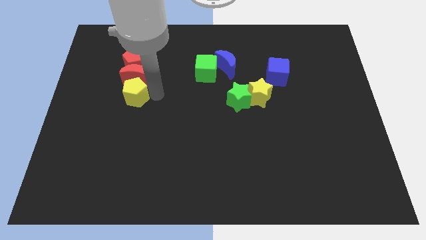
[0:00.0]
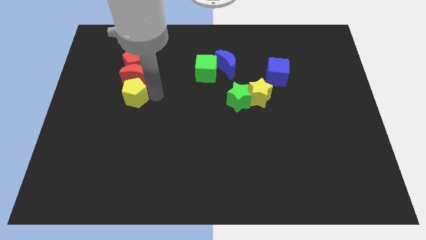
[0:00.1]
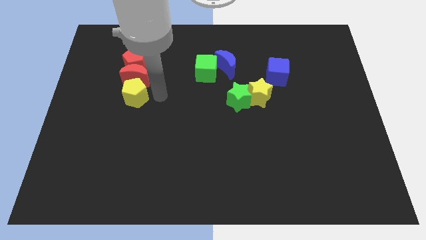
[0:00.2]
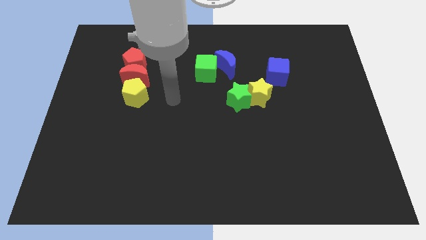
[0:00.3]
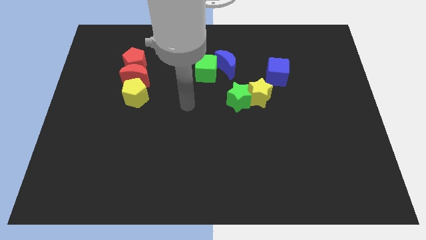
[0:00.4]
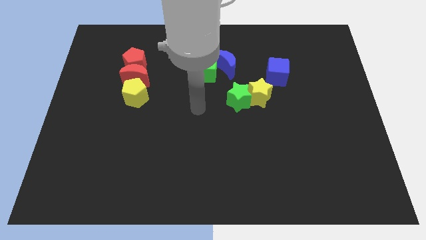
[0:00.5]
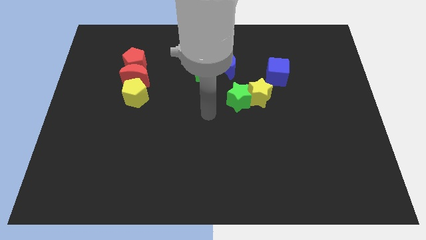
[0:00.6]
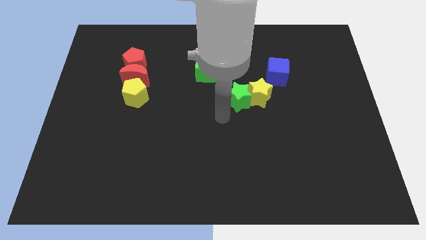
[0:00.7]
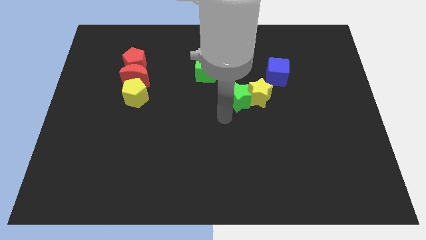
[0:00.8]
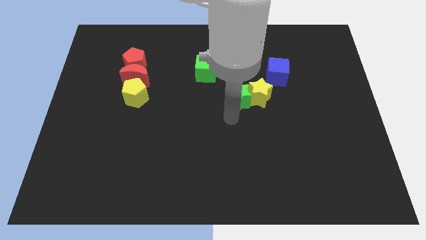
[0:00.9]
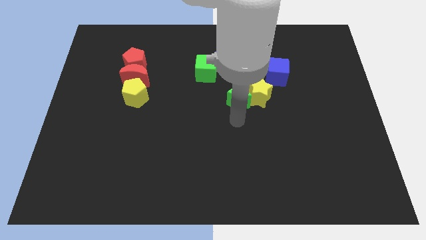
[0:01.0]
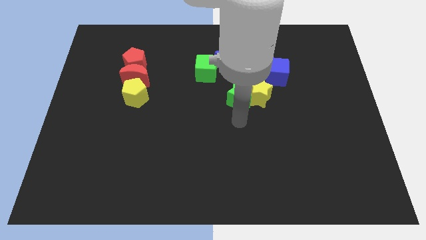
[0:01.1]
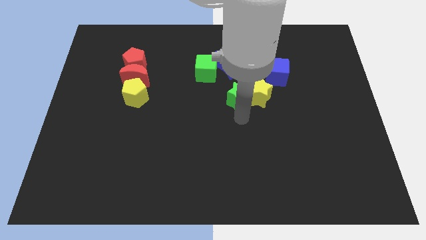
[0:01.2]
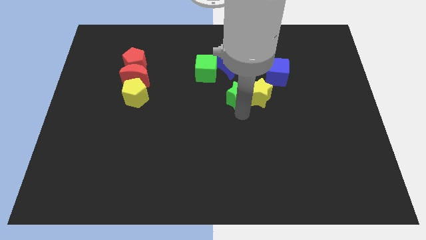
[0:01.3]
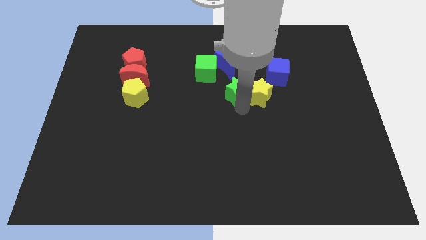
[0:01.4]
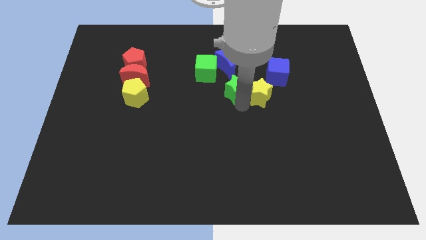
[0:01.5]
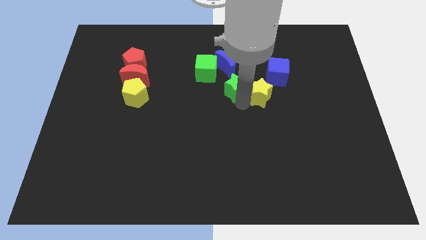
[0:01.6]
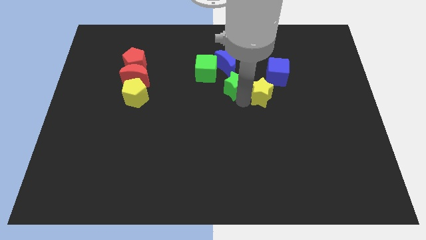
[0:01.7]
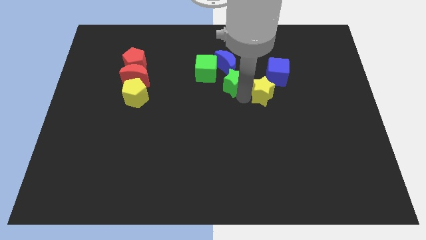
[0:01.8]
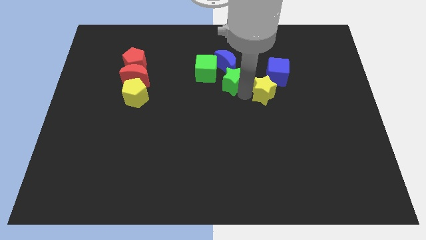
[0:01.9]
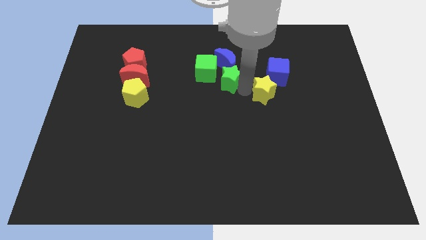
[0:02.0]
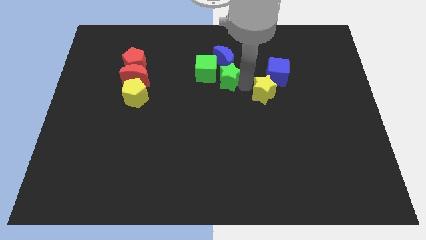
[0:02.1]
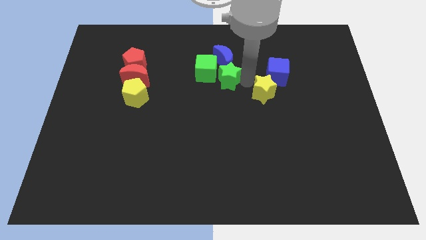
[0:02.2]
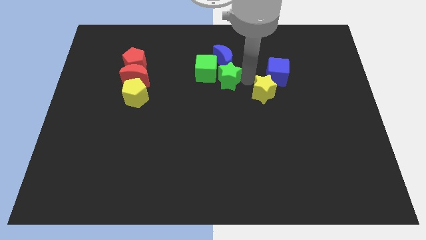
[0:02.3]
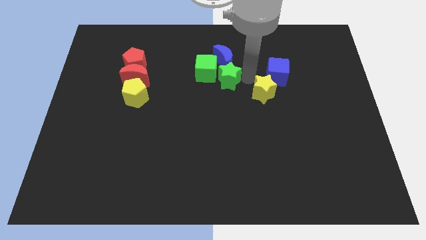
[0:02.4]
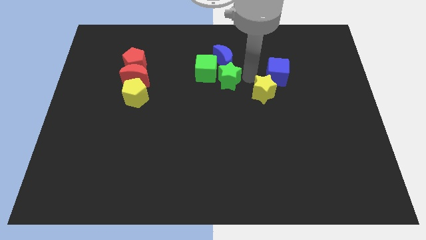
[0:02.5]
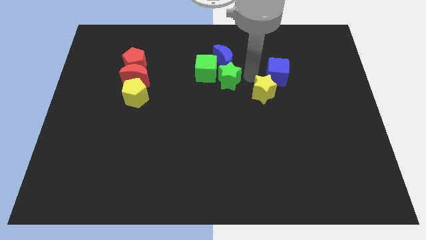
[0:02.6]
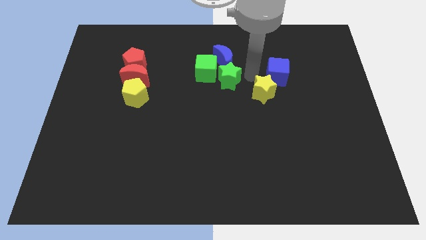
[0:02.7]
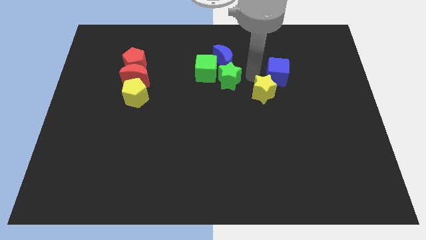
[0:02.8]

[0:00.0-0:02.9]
separate the green star and yellow star

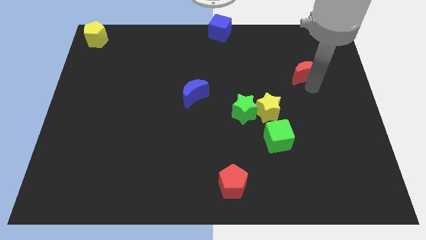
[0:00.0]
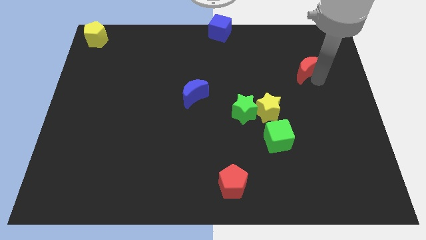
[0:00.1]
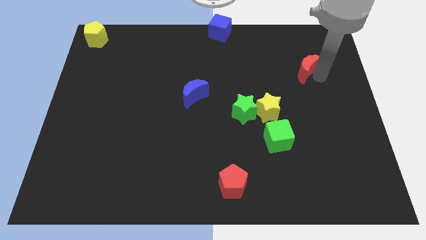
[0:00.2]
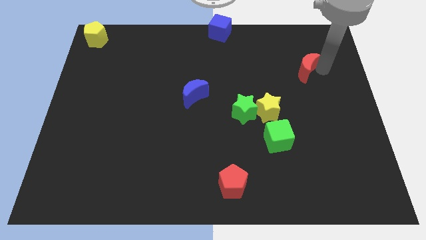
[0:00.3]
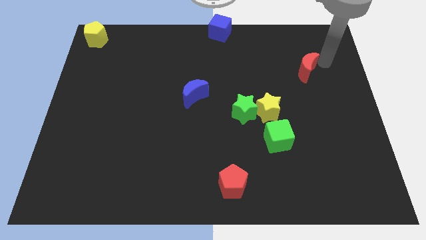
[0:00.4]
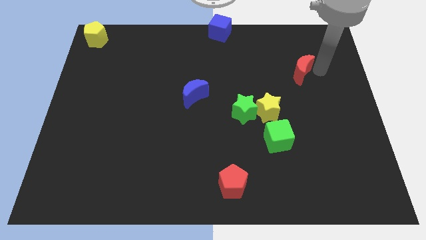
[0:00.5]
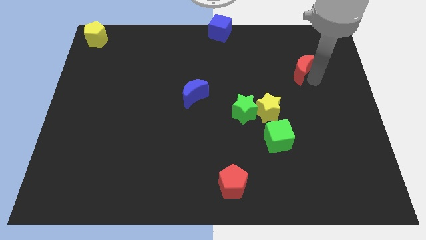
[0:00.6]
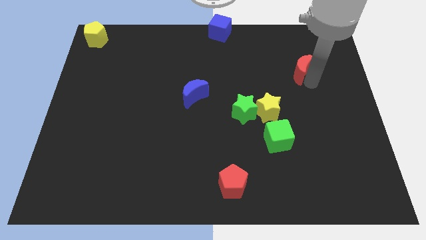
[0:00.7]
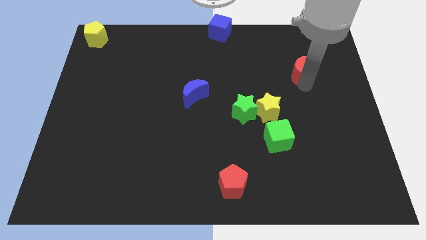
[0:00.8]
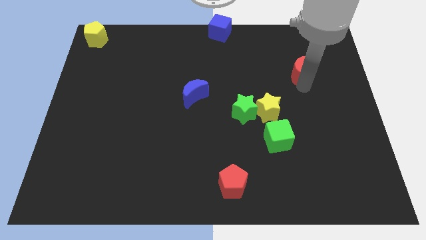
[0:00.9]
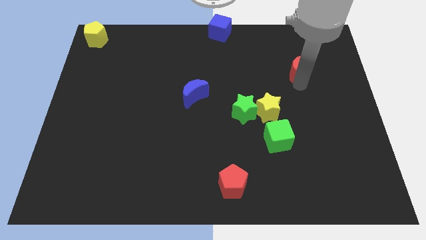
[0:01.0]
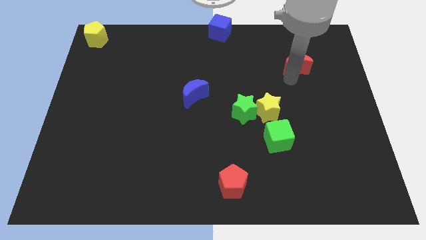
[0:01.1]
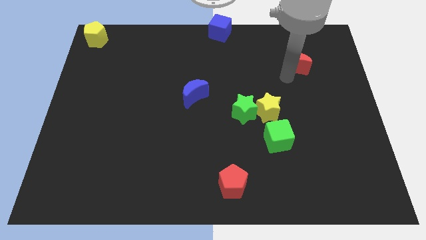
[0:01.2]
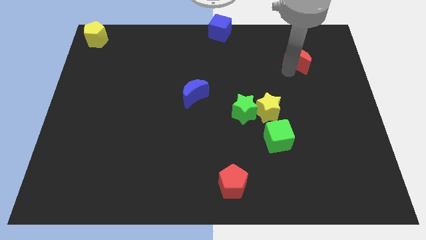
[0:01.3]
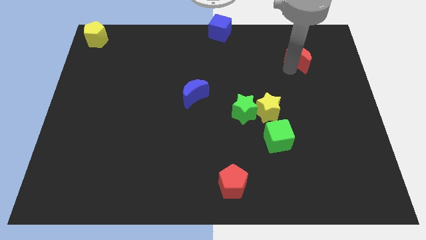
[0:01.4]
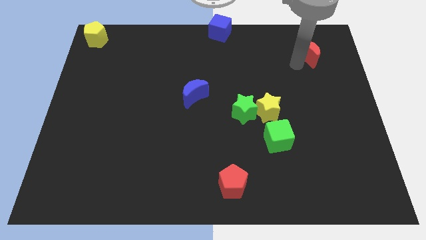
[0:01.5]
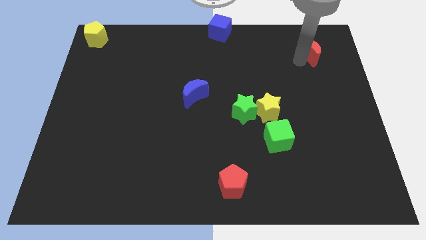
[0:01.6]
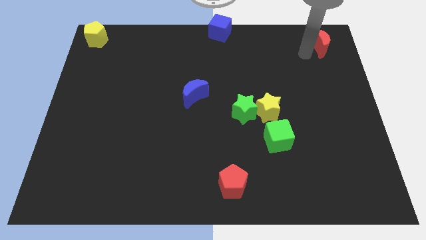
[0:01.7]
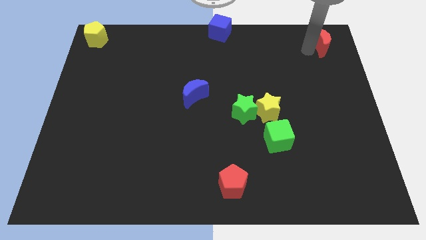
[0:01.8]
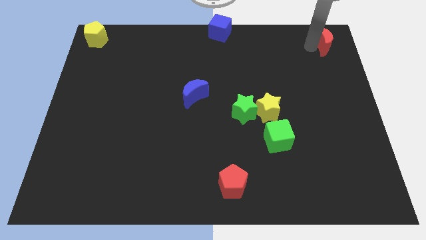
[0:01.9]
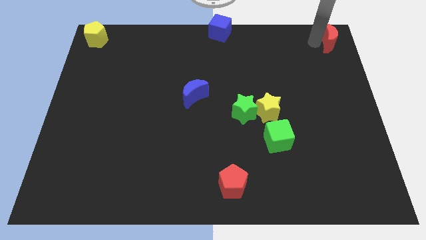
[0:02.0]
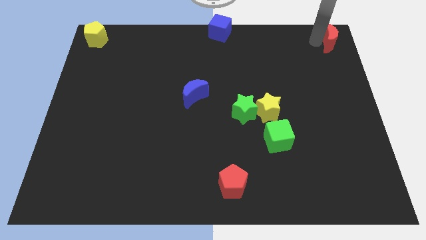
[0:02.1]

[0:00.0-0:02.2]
push the red crescent towards the top right

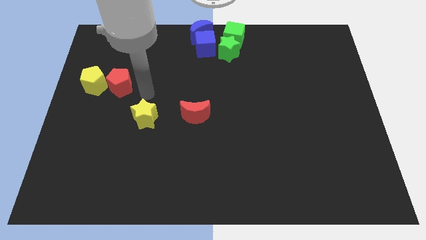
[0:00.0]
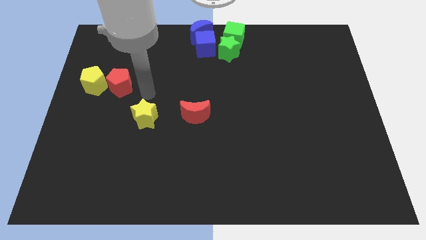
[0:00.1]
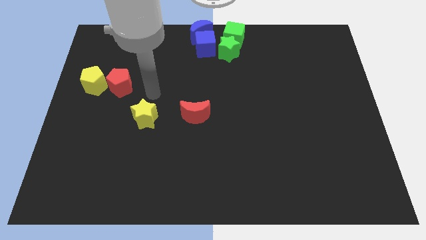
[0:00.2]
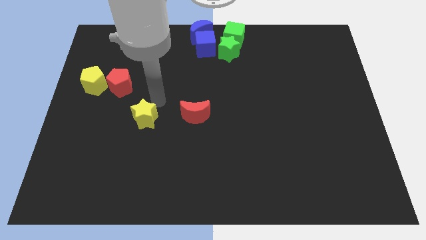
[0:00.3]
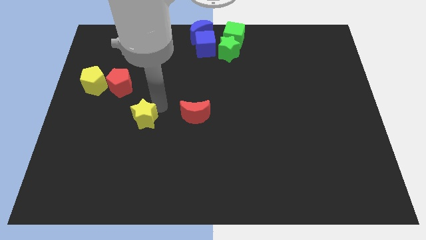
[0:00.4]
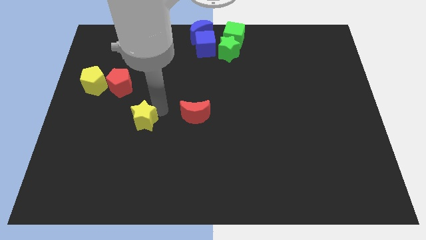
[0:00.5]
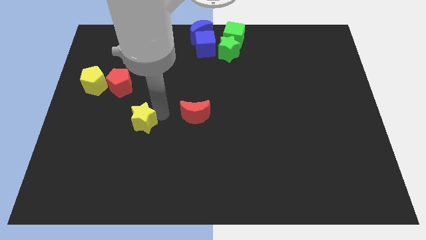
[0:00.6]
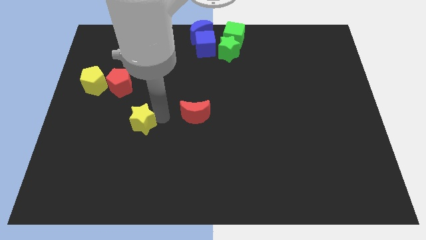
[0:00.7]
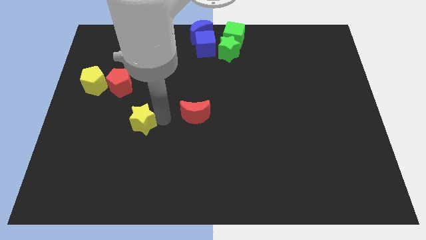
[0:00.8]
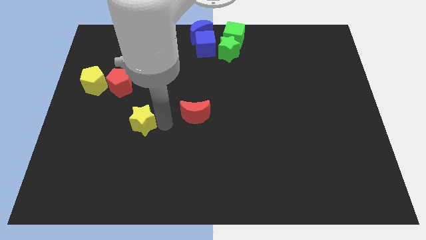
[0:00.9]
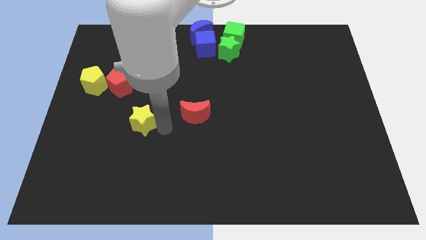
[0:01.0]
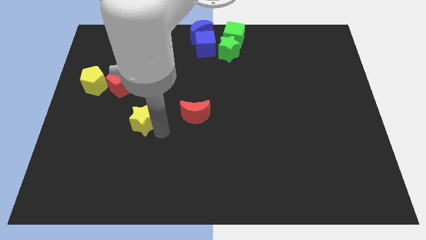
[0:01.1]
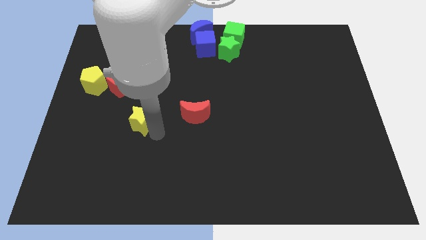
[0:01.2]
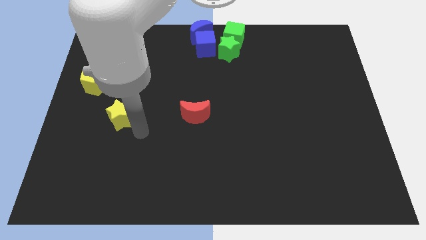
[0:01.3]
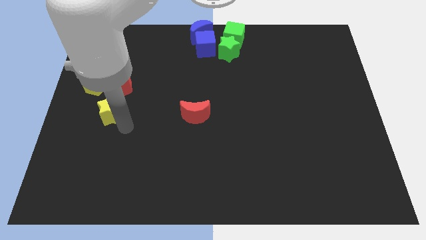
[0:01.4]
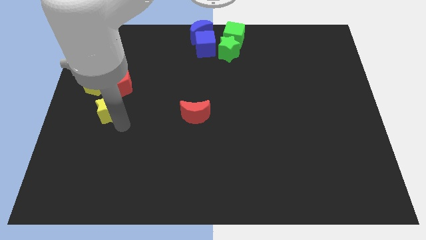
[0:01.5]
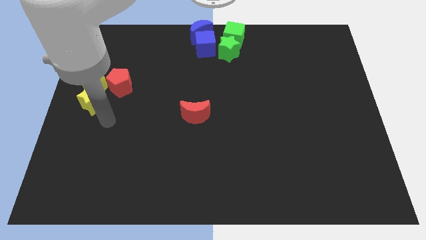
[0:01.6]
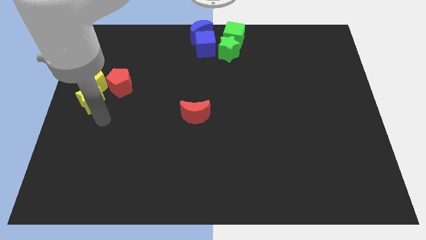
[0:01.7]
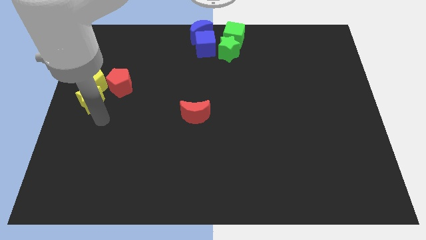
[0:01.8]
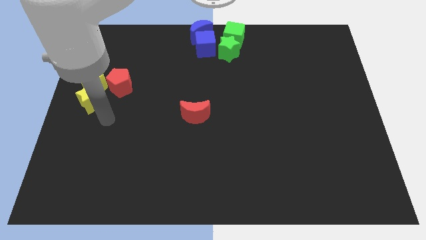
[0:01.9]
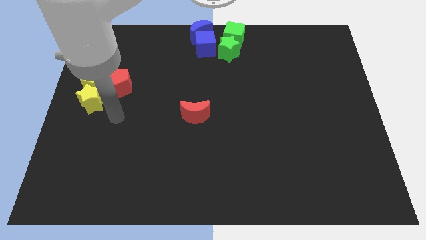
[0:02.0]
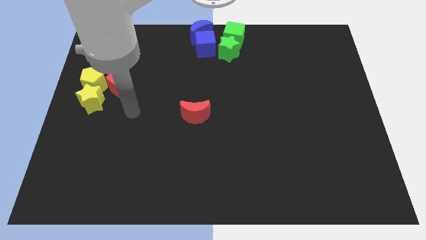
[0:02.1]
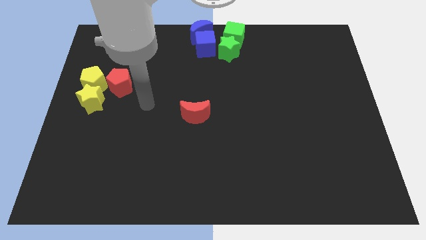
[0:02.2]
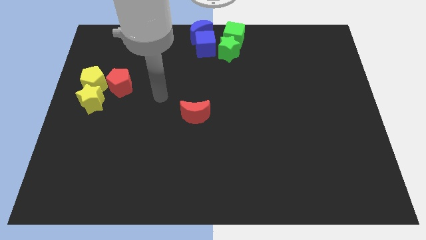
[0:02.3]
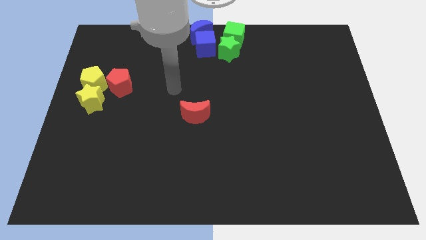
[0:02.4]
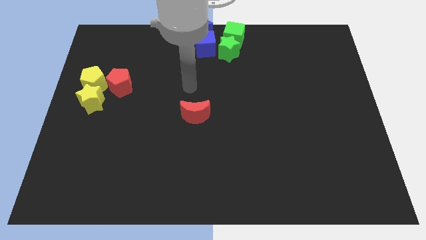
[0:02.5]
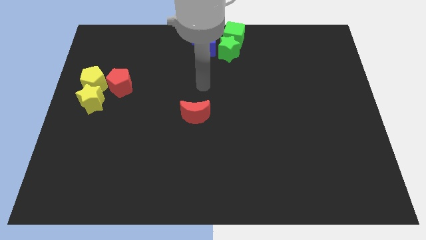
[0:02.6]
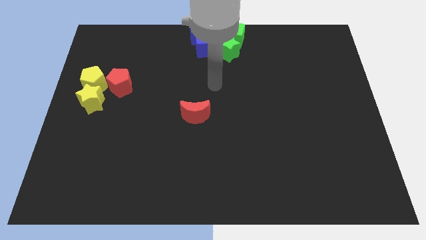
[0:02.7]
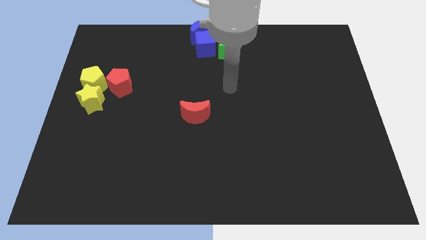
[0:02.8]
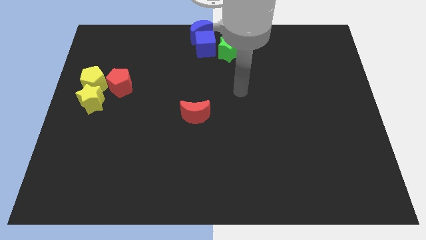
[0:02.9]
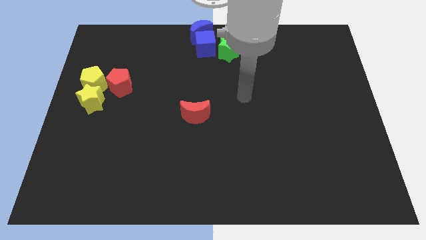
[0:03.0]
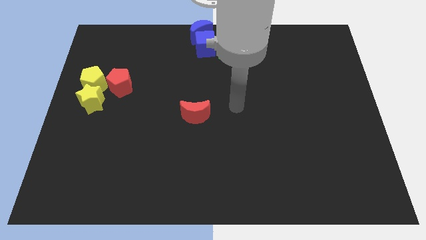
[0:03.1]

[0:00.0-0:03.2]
move the yellow star below the yellow pentagon

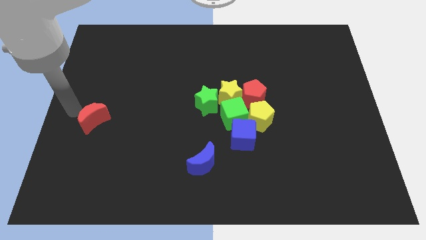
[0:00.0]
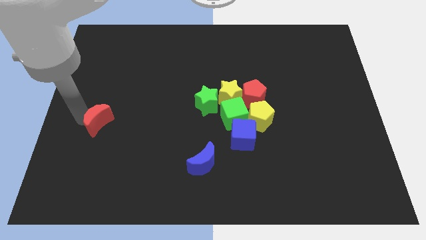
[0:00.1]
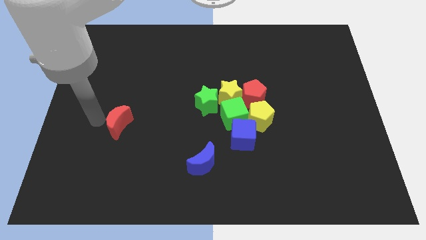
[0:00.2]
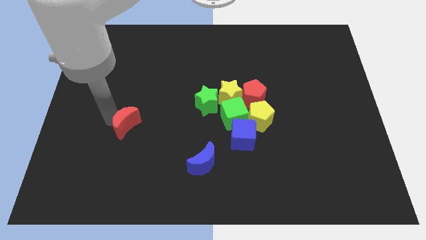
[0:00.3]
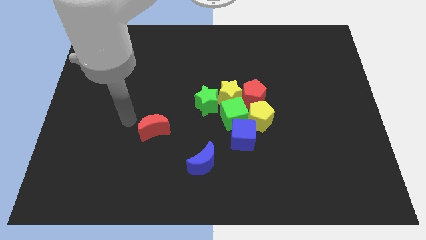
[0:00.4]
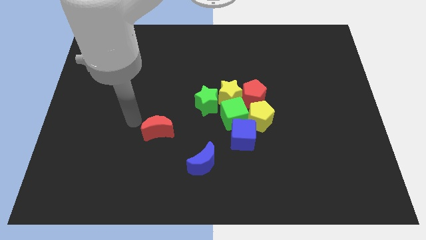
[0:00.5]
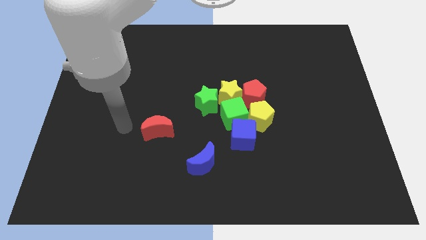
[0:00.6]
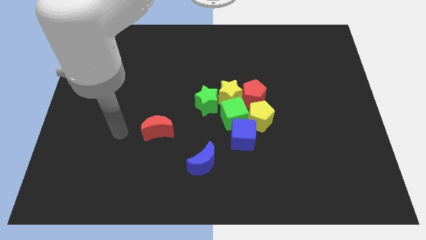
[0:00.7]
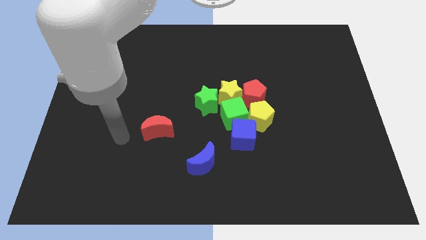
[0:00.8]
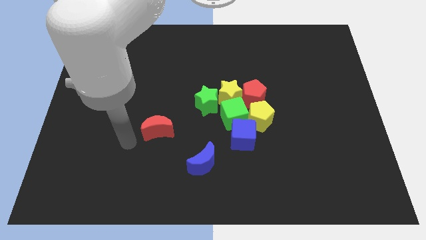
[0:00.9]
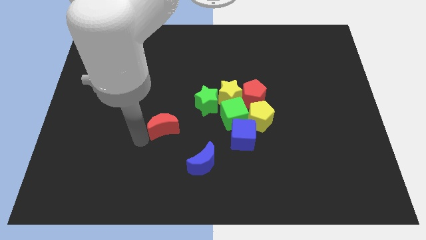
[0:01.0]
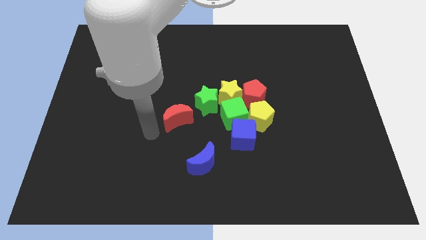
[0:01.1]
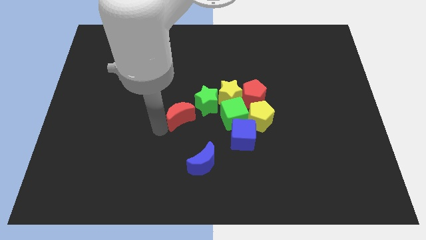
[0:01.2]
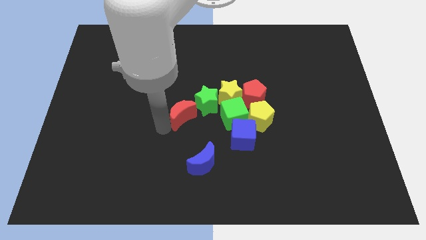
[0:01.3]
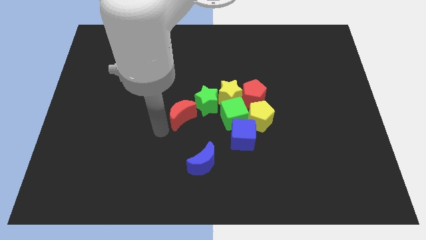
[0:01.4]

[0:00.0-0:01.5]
push the red crescent towards the green star
